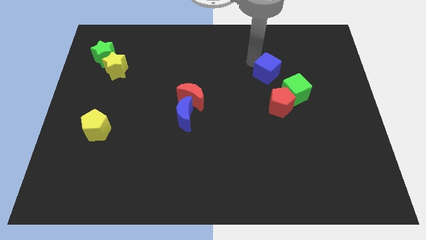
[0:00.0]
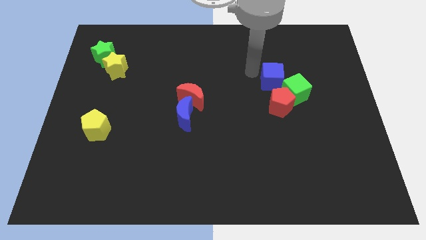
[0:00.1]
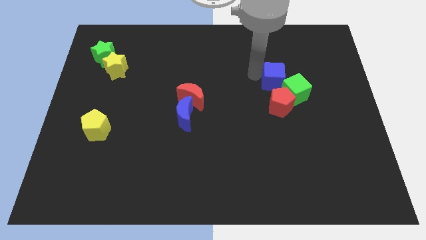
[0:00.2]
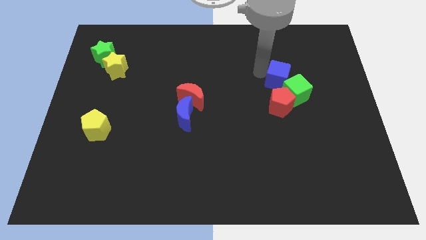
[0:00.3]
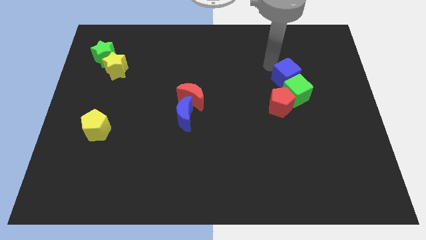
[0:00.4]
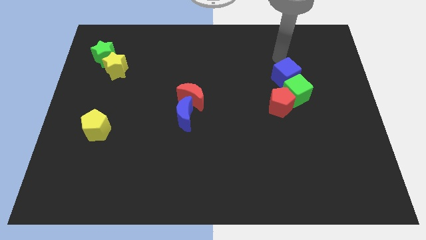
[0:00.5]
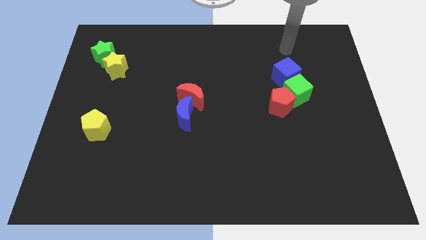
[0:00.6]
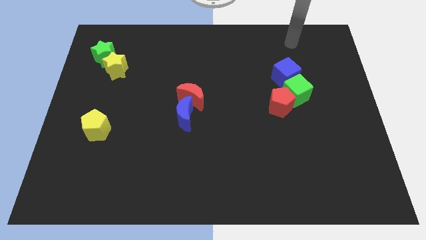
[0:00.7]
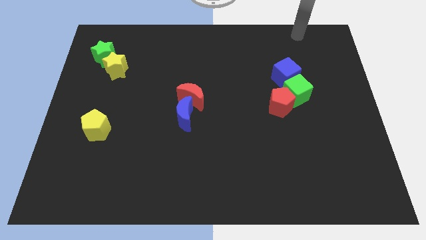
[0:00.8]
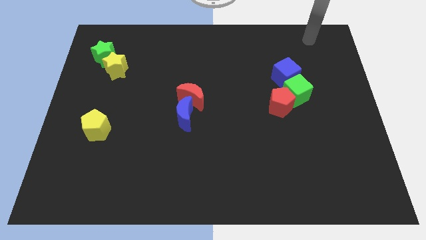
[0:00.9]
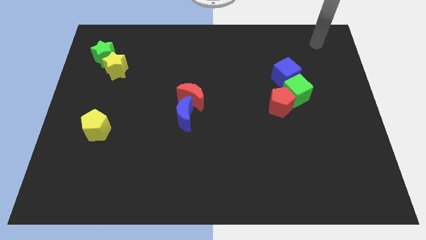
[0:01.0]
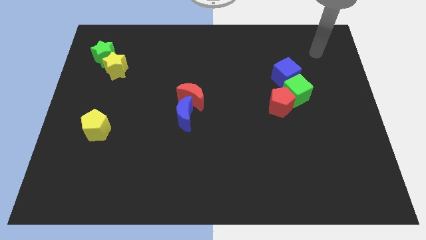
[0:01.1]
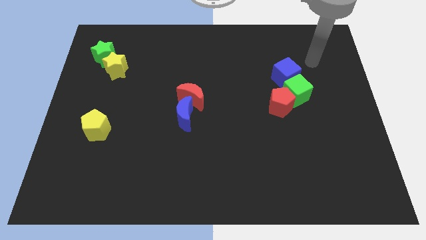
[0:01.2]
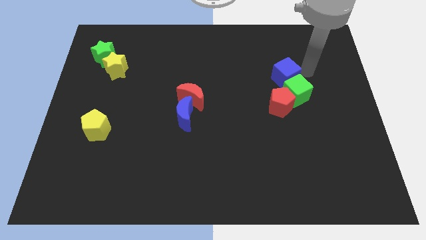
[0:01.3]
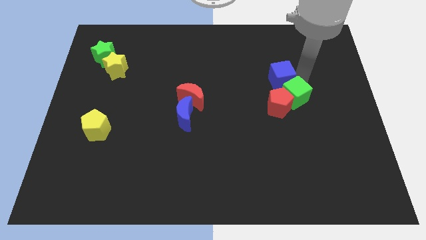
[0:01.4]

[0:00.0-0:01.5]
drag the blue cube and place it above the green cube

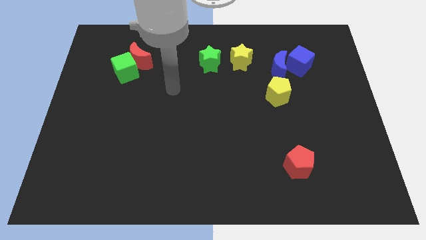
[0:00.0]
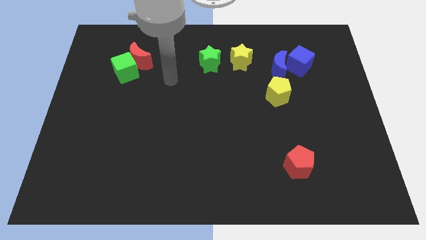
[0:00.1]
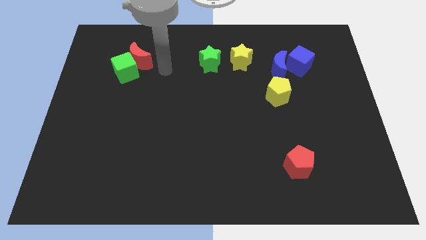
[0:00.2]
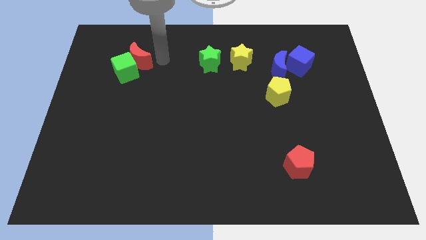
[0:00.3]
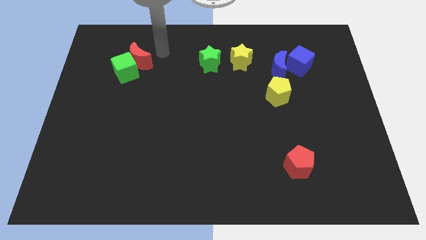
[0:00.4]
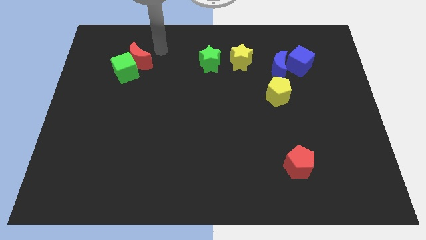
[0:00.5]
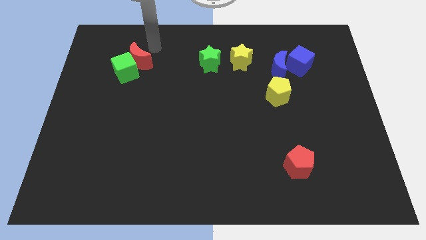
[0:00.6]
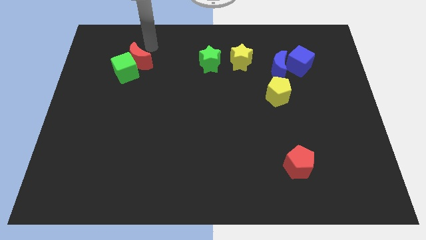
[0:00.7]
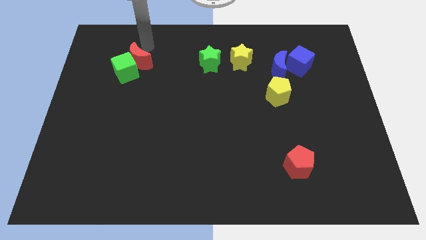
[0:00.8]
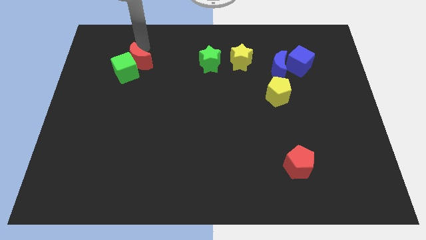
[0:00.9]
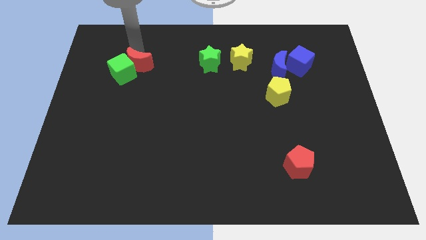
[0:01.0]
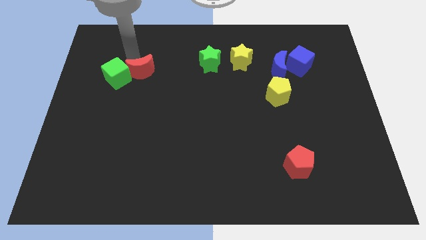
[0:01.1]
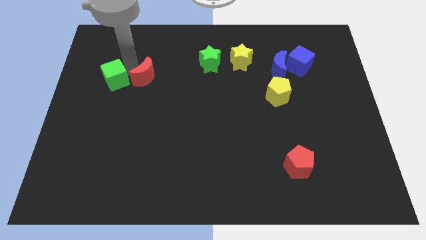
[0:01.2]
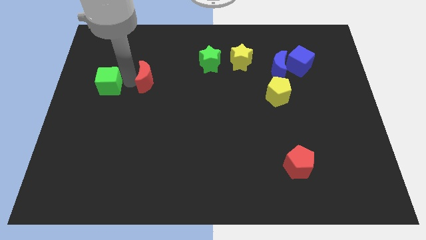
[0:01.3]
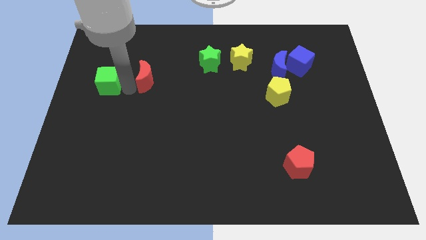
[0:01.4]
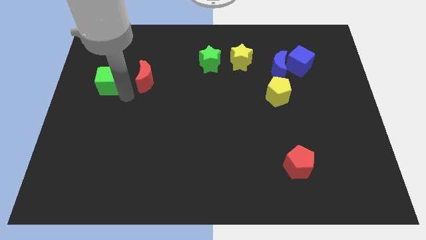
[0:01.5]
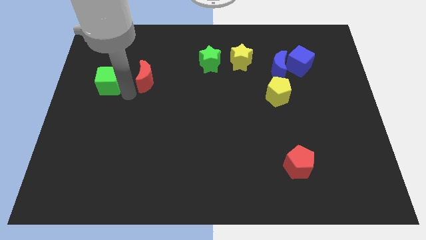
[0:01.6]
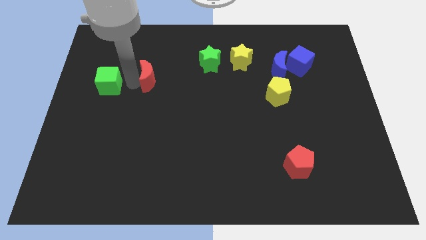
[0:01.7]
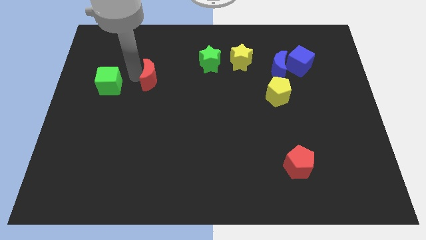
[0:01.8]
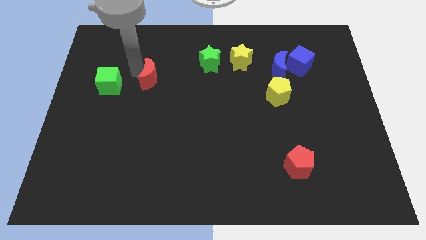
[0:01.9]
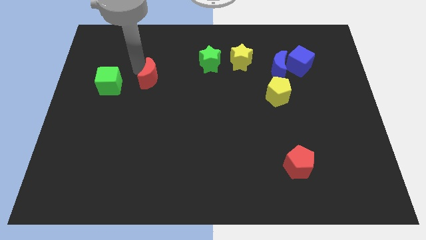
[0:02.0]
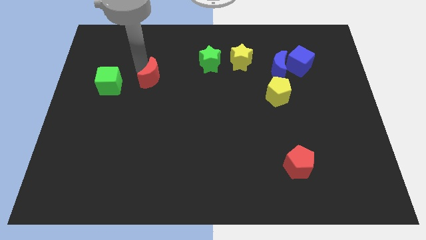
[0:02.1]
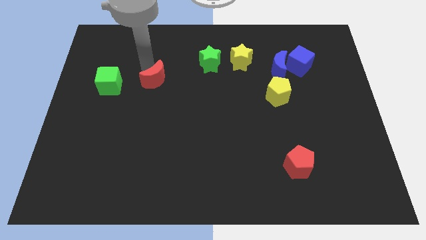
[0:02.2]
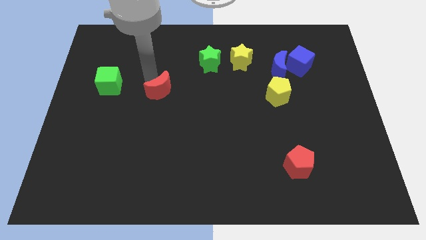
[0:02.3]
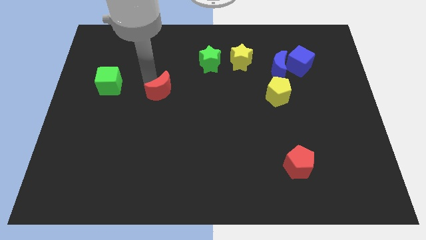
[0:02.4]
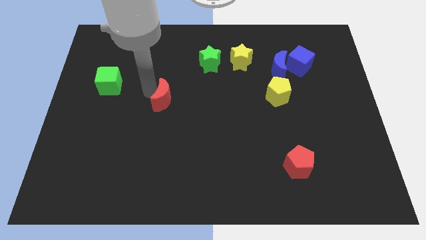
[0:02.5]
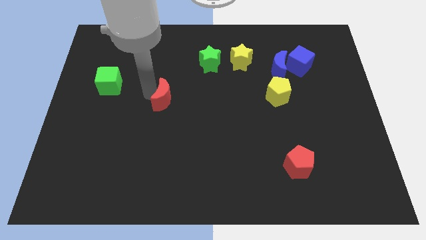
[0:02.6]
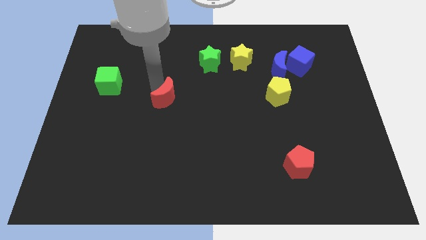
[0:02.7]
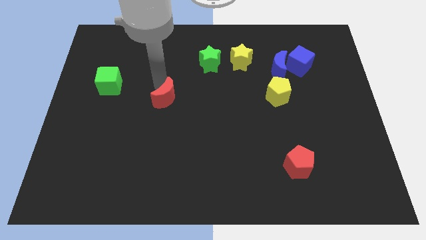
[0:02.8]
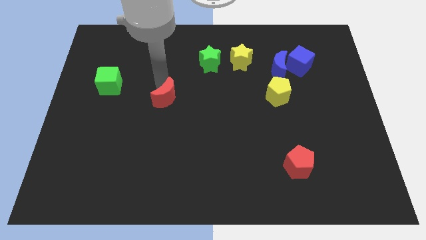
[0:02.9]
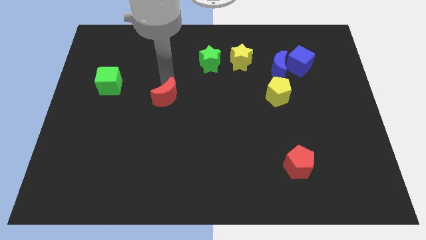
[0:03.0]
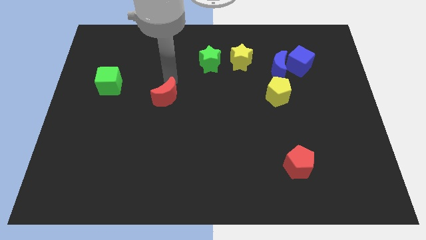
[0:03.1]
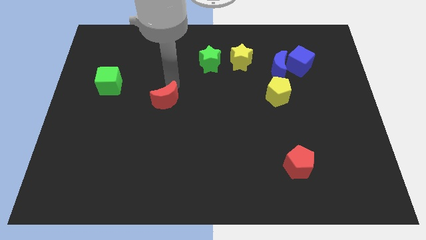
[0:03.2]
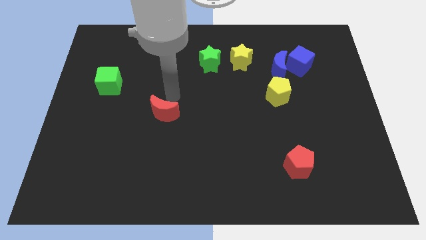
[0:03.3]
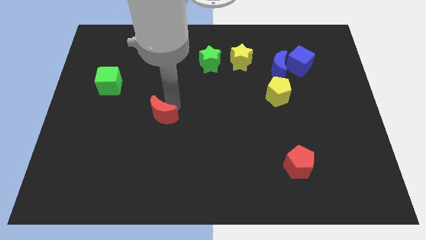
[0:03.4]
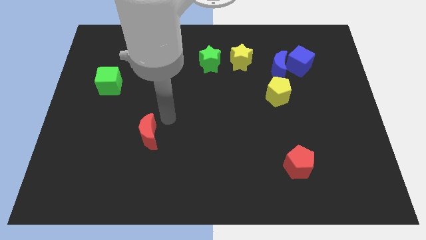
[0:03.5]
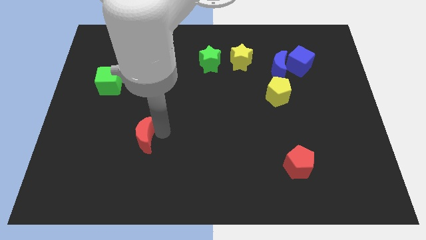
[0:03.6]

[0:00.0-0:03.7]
separate red crescent from the green cube

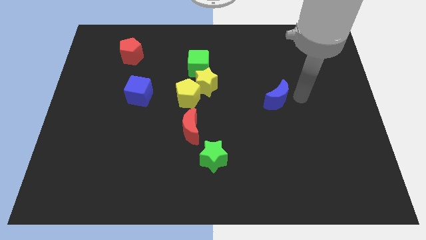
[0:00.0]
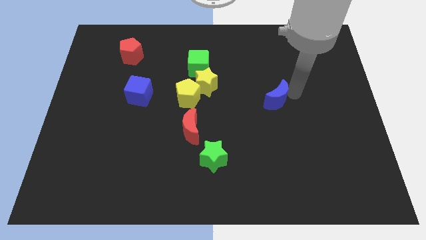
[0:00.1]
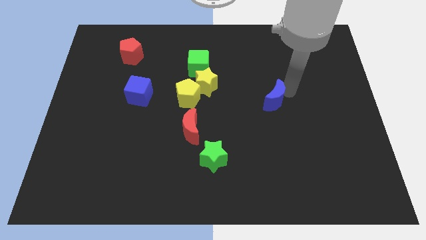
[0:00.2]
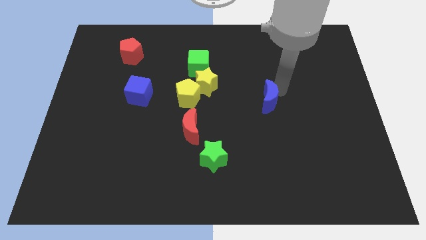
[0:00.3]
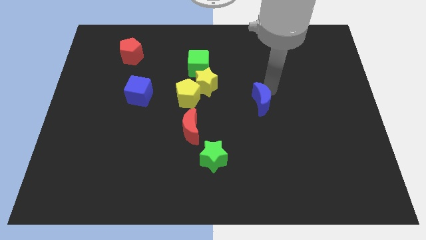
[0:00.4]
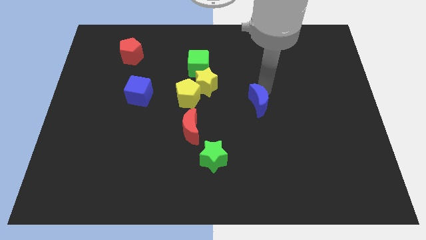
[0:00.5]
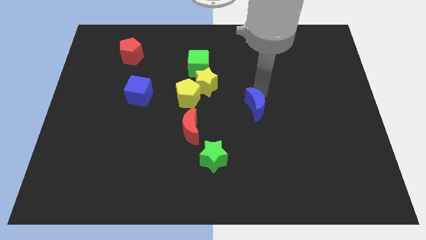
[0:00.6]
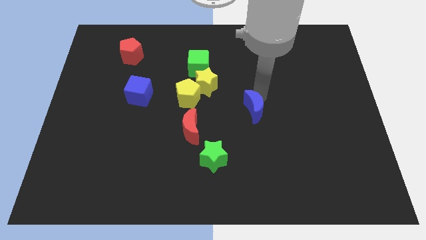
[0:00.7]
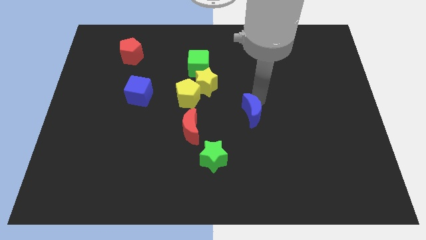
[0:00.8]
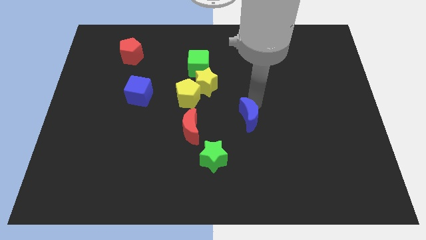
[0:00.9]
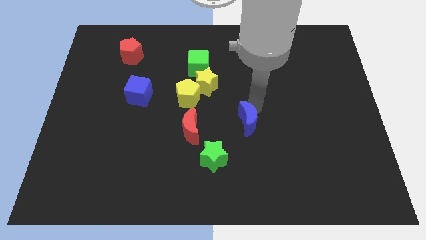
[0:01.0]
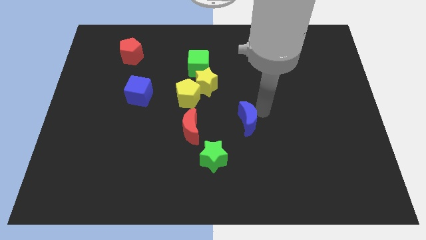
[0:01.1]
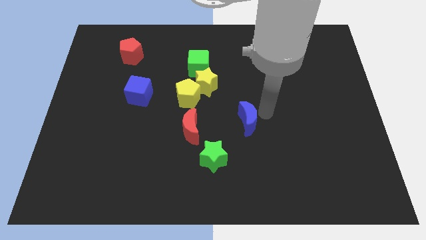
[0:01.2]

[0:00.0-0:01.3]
move the blue moon slightly downwards

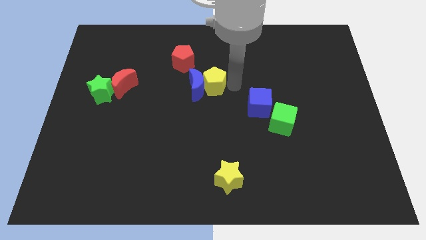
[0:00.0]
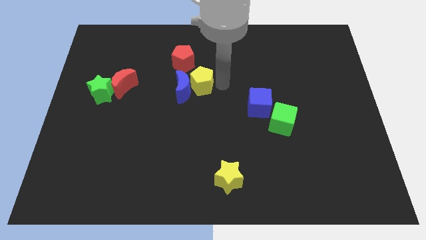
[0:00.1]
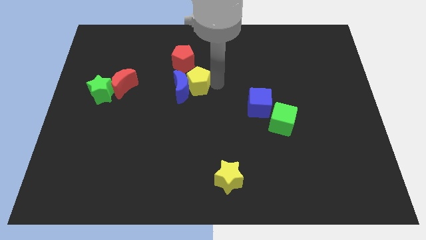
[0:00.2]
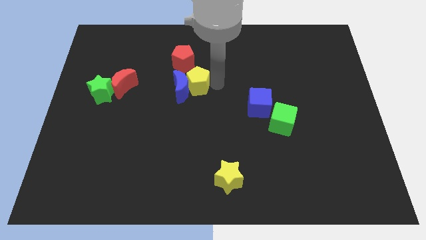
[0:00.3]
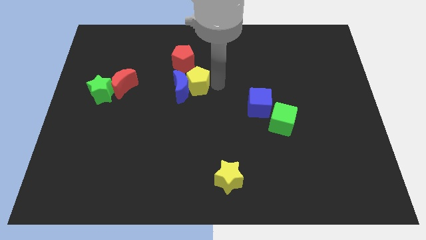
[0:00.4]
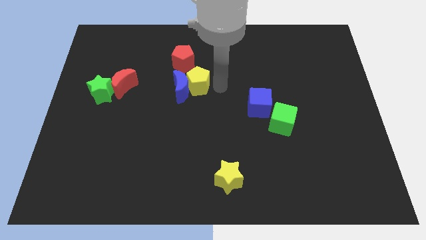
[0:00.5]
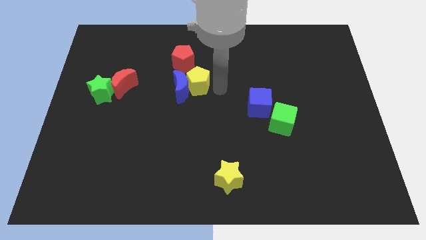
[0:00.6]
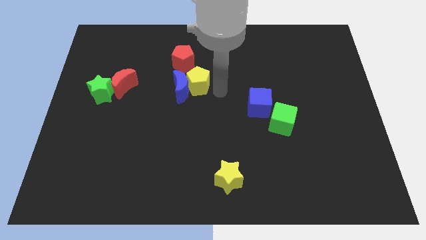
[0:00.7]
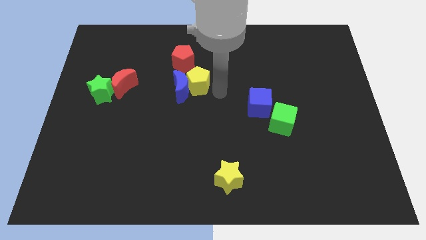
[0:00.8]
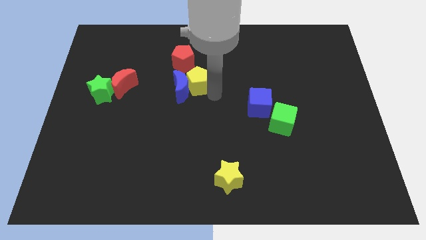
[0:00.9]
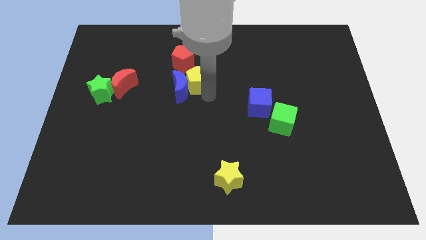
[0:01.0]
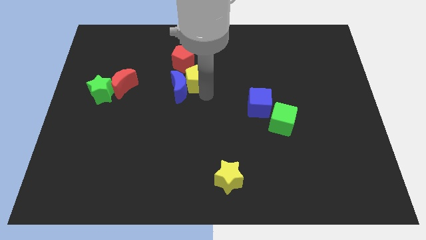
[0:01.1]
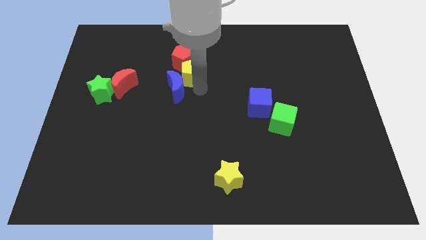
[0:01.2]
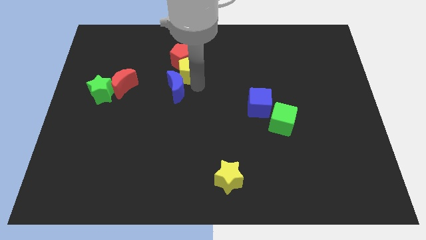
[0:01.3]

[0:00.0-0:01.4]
move the yellow pentagon to the bottom of the red pentagon

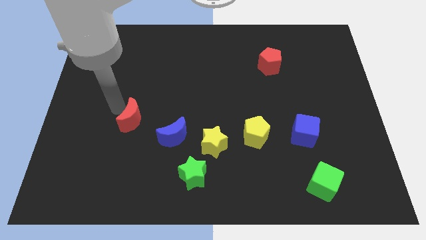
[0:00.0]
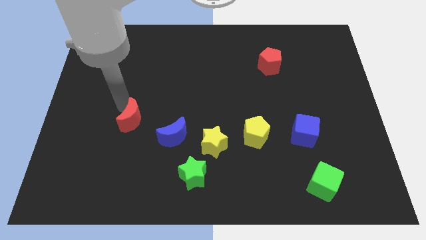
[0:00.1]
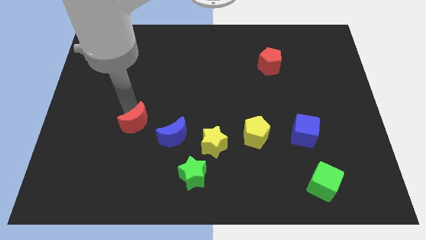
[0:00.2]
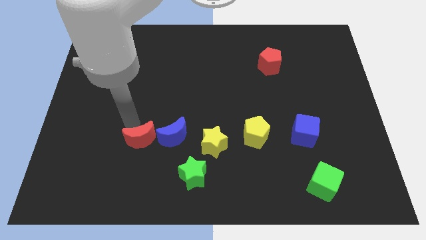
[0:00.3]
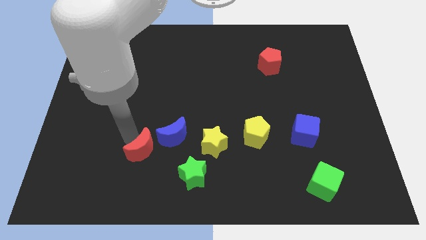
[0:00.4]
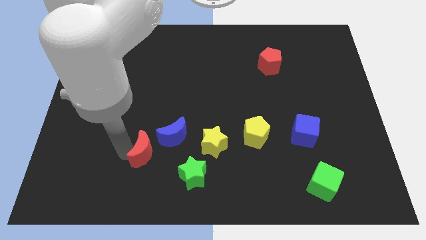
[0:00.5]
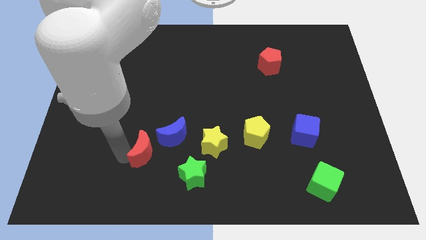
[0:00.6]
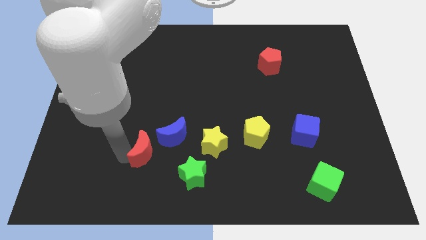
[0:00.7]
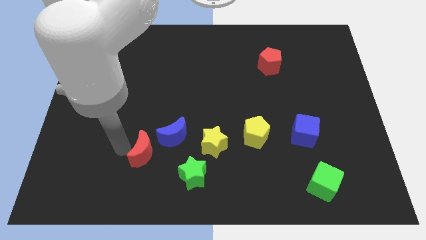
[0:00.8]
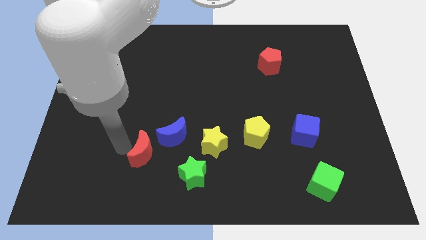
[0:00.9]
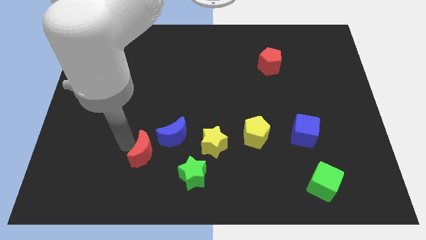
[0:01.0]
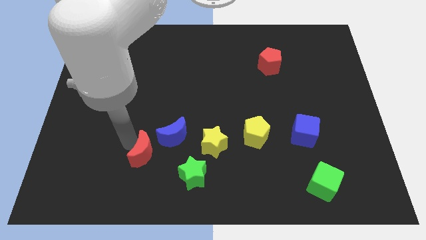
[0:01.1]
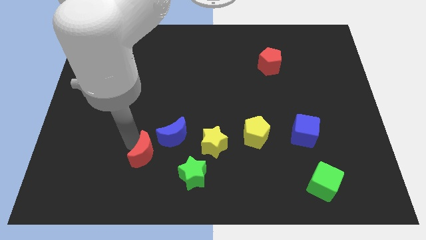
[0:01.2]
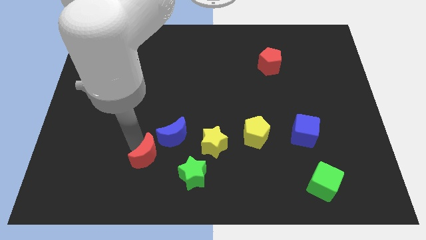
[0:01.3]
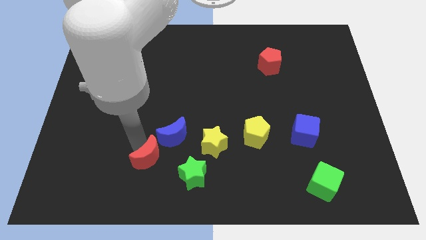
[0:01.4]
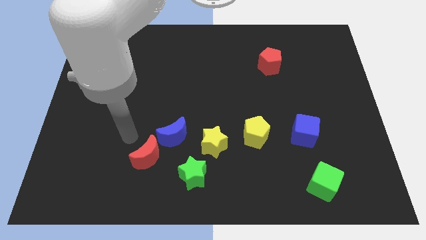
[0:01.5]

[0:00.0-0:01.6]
move the red crescent to the bottom left blue crescent
